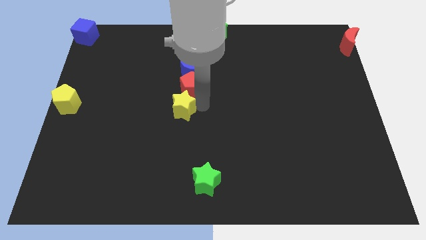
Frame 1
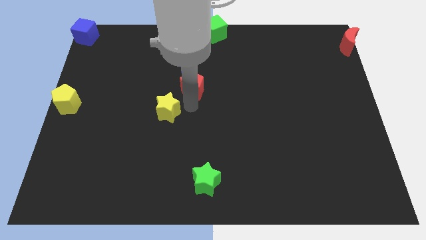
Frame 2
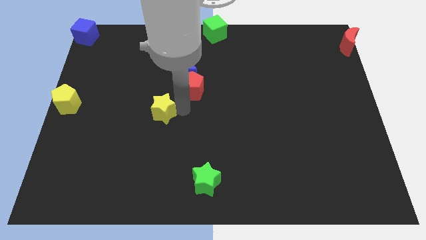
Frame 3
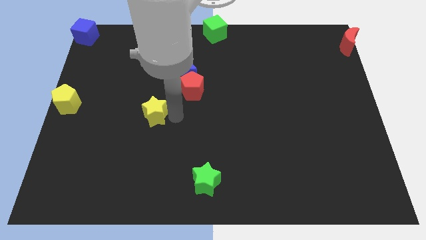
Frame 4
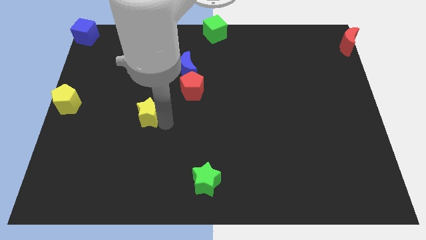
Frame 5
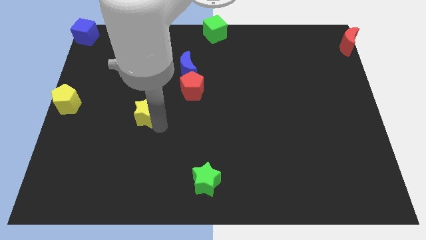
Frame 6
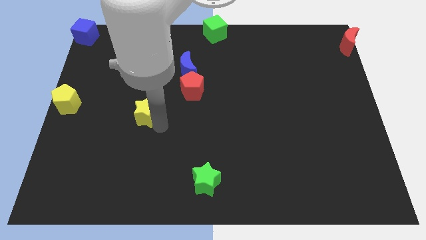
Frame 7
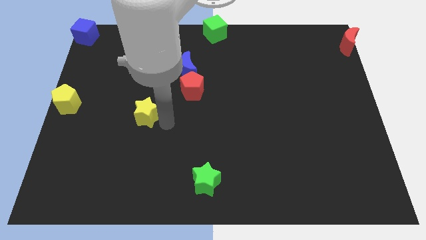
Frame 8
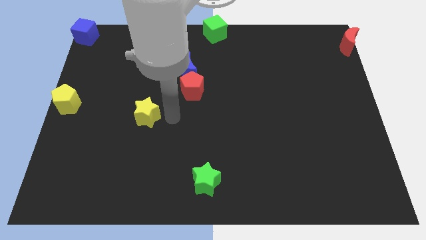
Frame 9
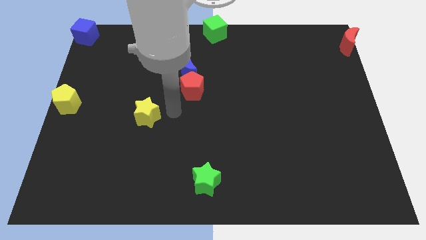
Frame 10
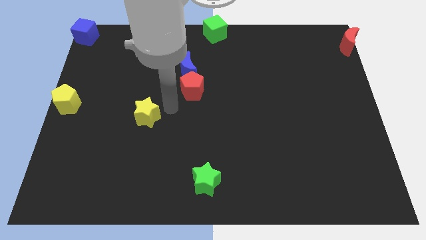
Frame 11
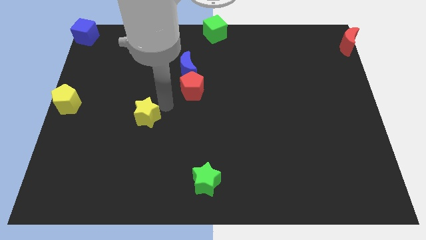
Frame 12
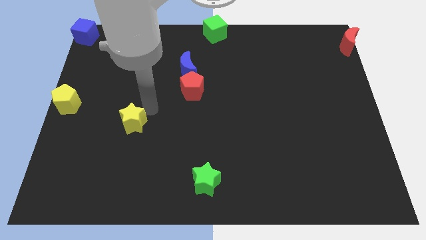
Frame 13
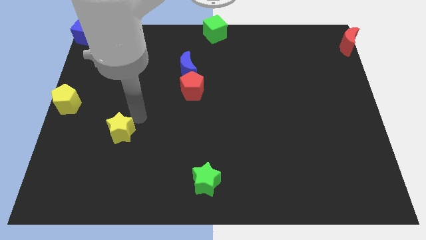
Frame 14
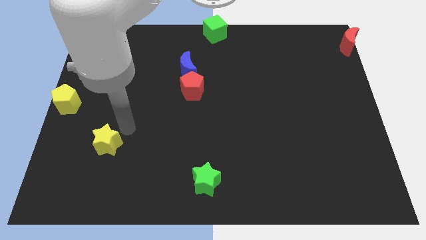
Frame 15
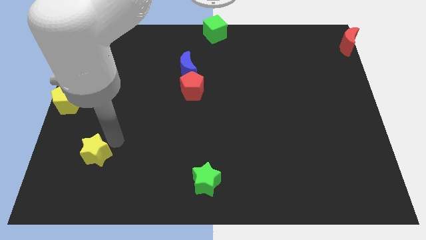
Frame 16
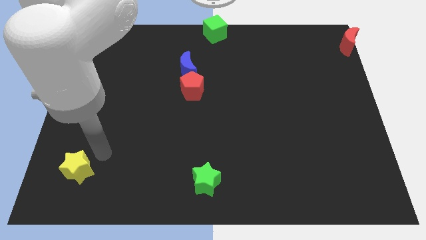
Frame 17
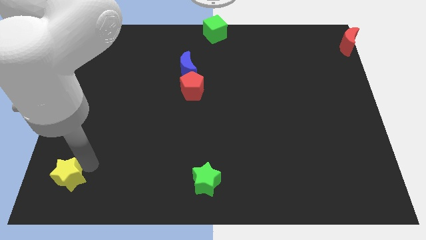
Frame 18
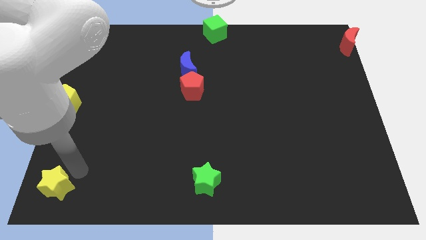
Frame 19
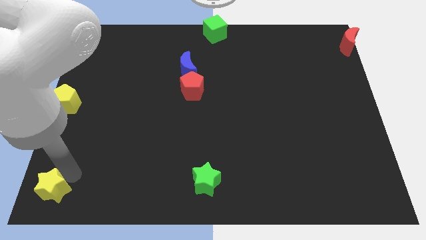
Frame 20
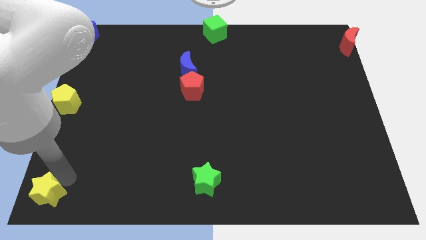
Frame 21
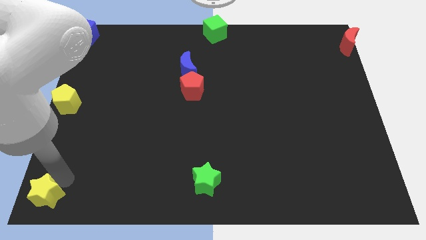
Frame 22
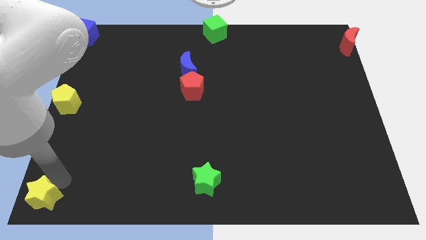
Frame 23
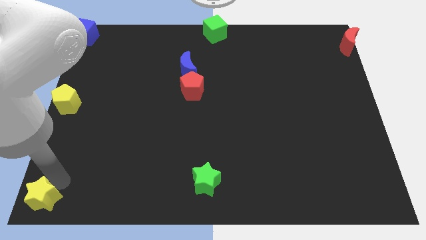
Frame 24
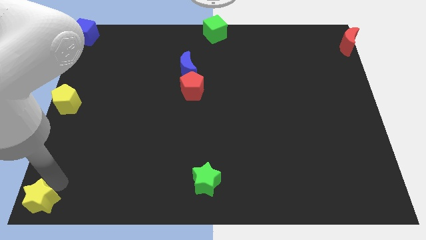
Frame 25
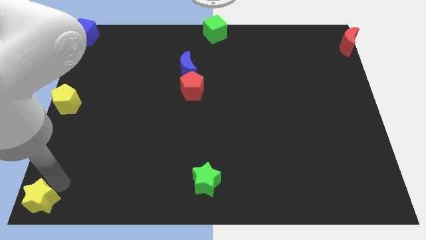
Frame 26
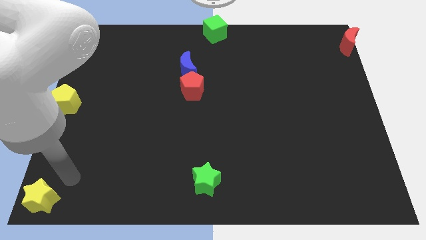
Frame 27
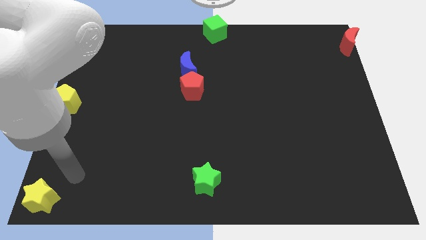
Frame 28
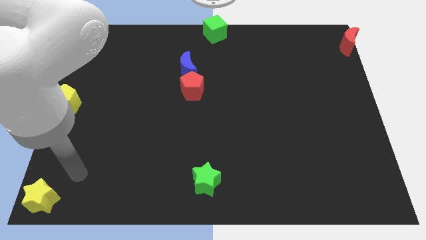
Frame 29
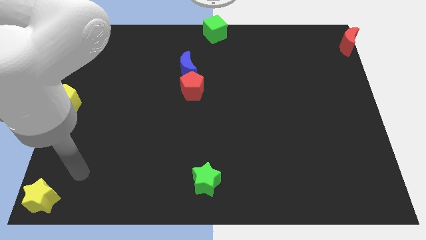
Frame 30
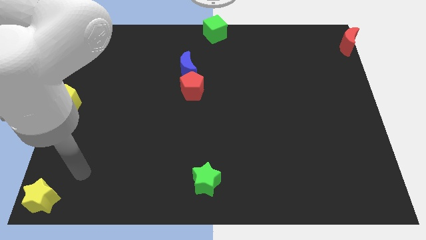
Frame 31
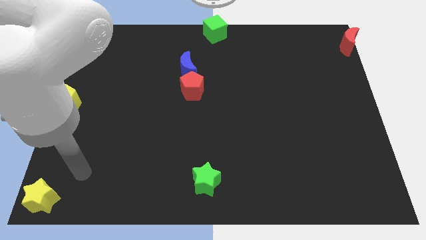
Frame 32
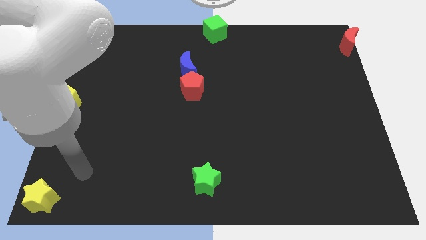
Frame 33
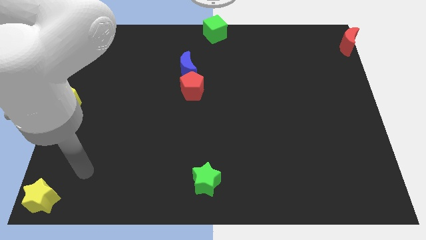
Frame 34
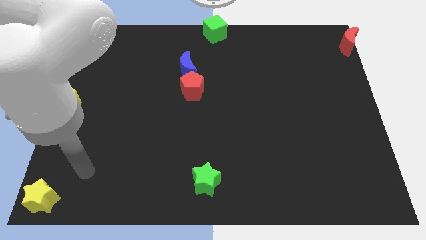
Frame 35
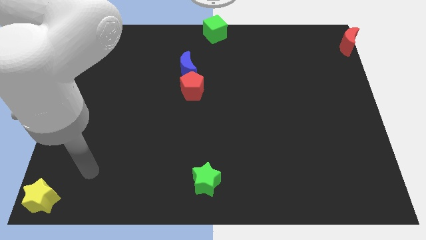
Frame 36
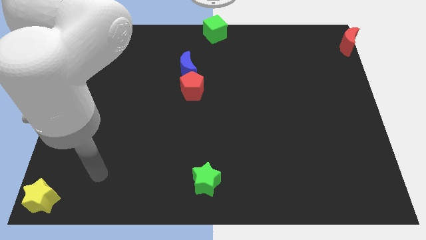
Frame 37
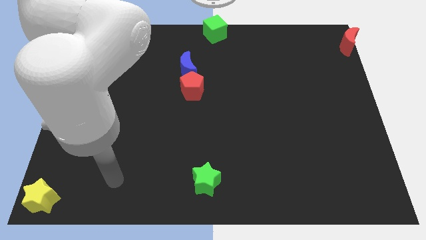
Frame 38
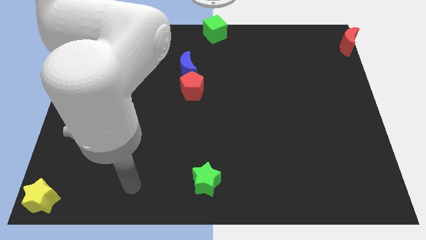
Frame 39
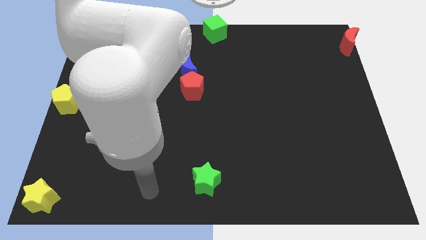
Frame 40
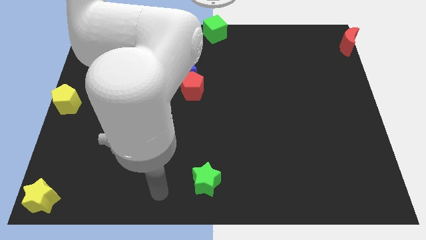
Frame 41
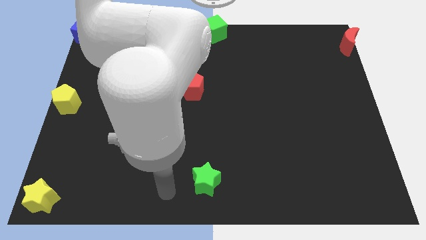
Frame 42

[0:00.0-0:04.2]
place the yellow star at the bottom left corner of the board

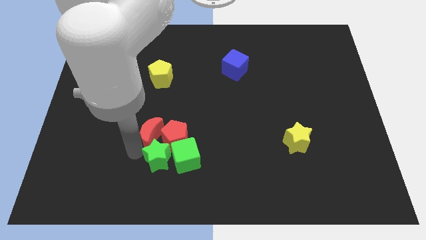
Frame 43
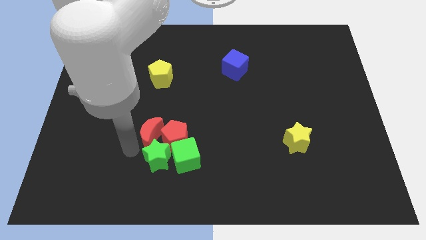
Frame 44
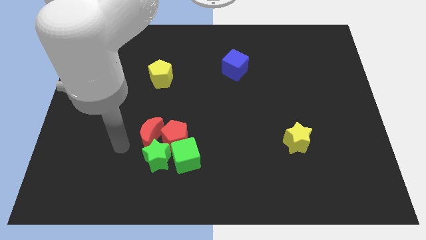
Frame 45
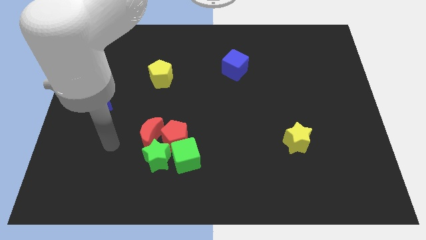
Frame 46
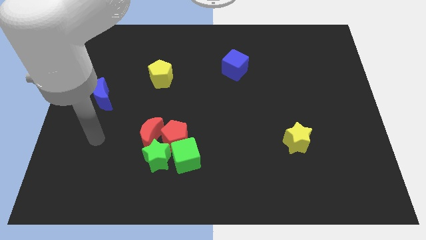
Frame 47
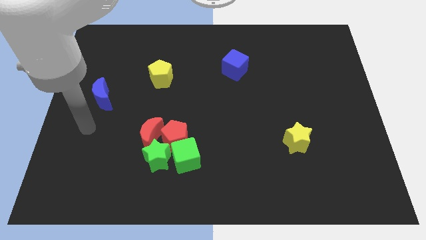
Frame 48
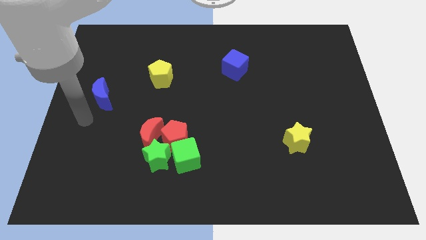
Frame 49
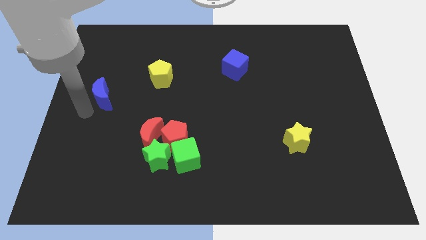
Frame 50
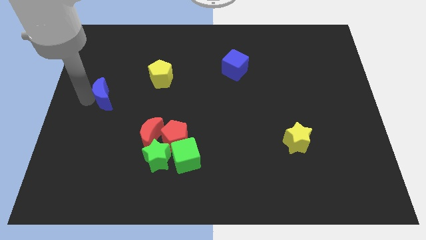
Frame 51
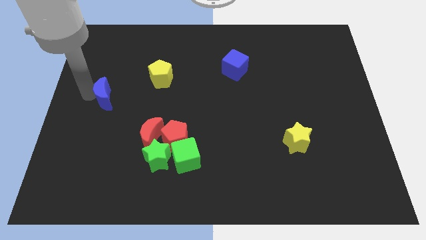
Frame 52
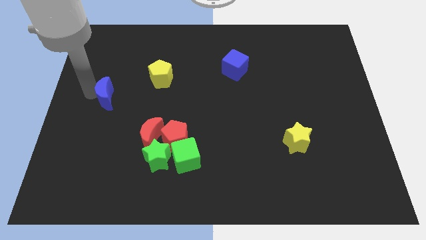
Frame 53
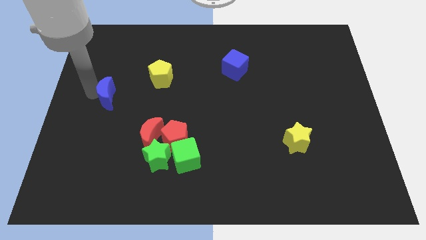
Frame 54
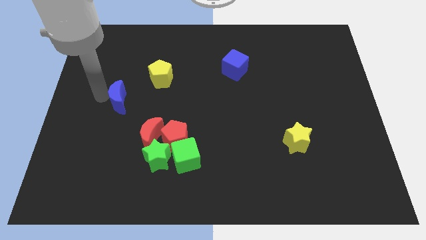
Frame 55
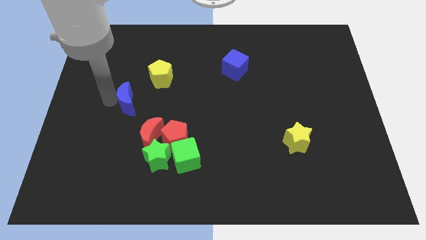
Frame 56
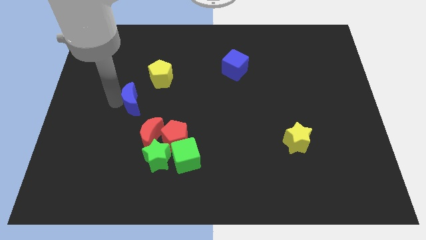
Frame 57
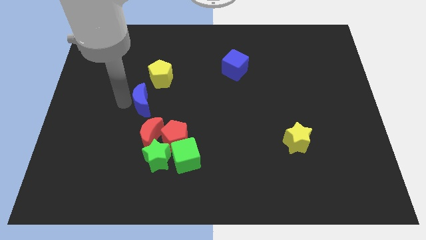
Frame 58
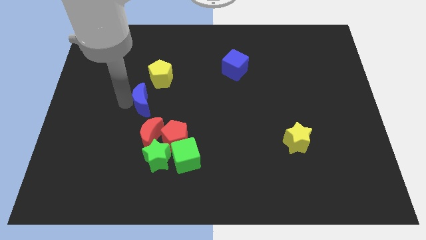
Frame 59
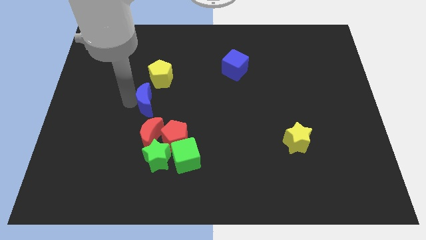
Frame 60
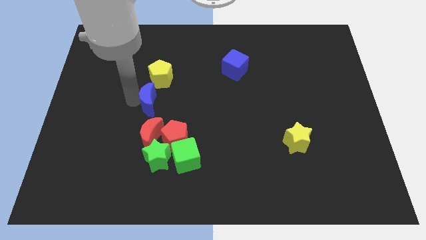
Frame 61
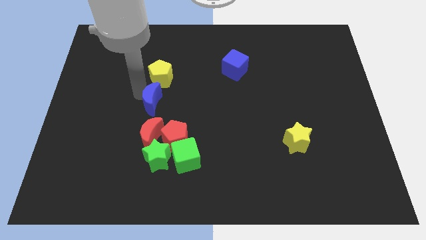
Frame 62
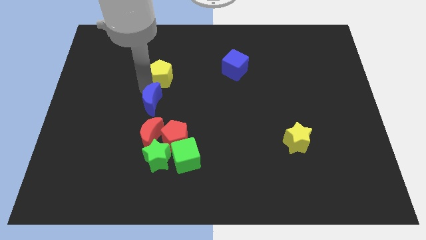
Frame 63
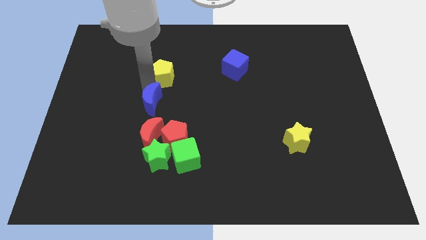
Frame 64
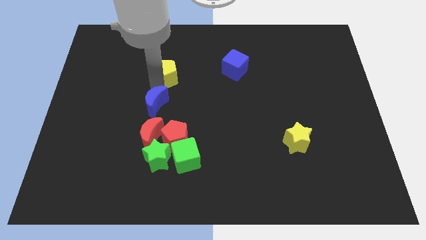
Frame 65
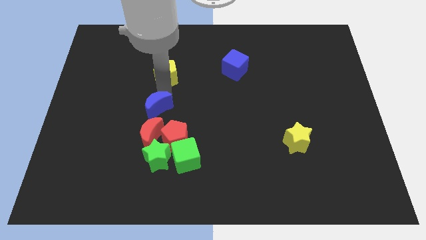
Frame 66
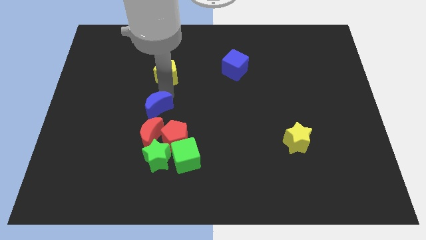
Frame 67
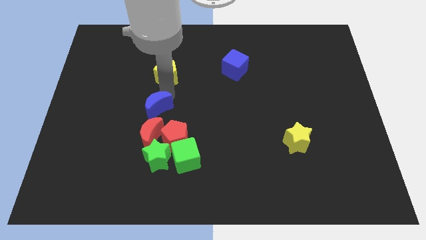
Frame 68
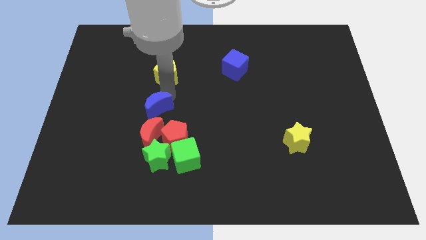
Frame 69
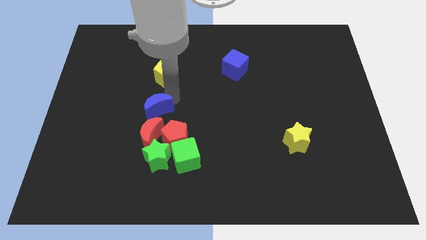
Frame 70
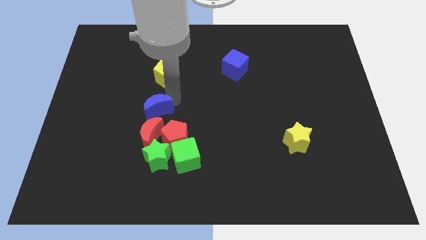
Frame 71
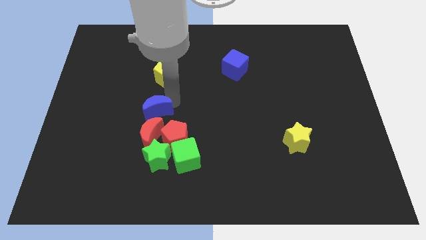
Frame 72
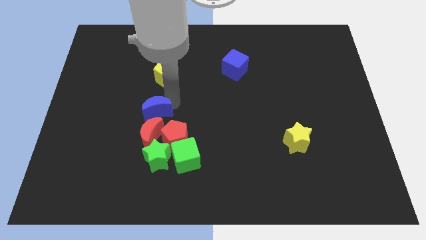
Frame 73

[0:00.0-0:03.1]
move the blue crescent above the red crescent

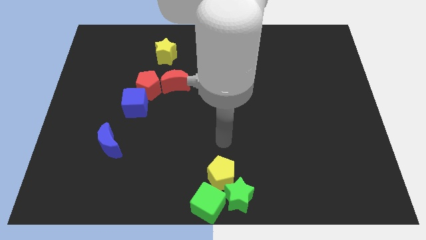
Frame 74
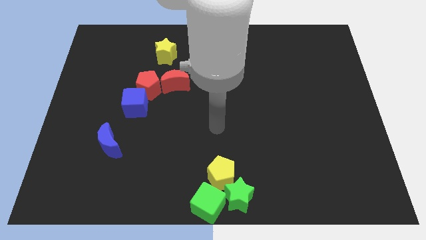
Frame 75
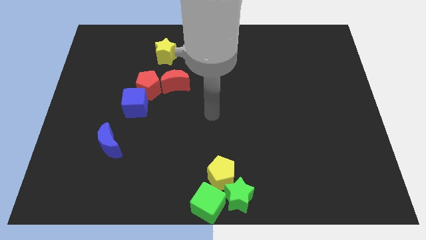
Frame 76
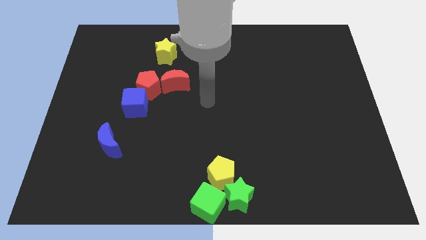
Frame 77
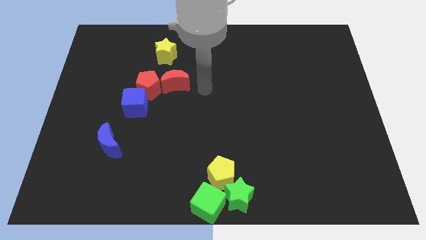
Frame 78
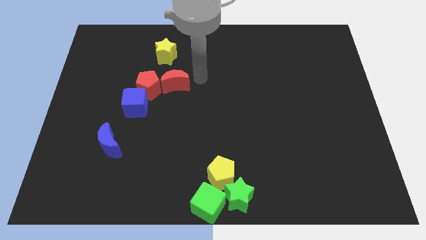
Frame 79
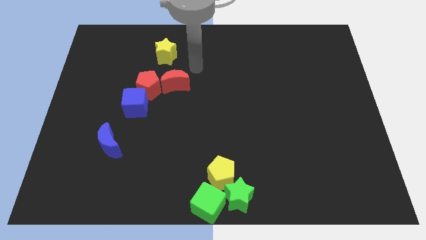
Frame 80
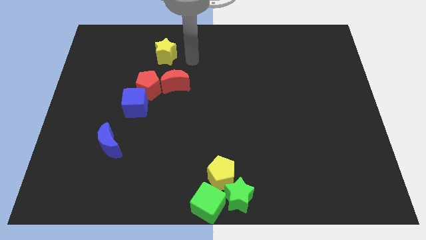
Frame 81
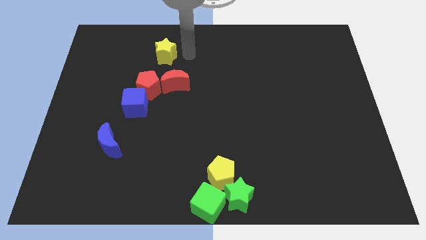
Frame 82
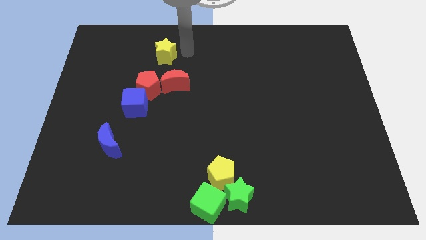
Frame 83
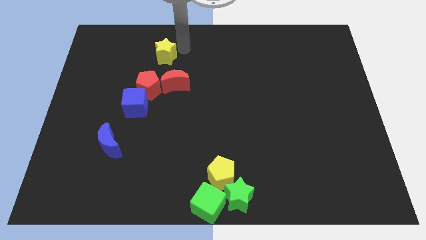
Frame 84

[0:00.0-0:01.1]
go away from the yellow pentagon

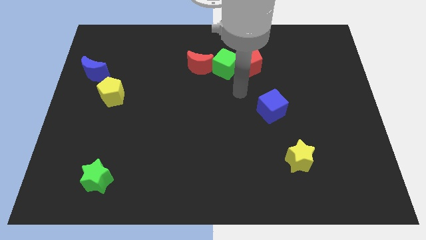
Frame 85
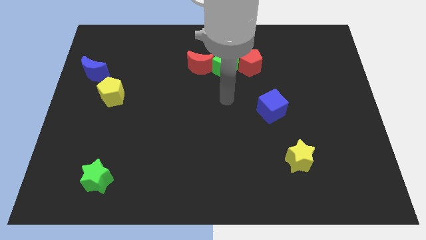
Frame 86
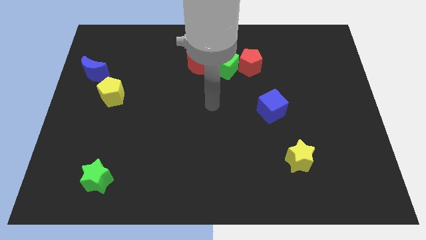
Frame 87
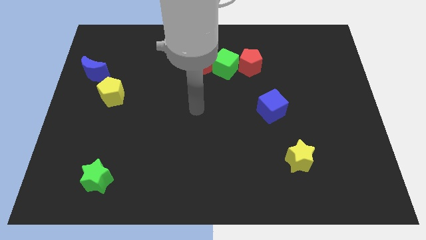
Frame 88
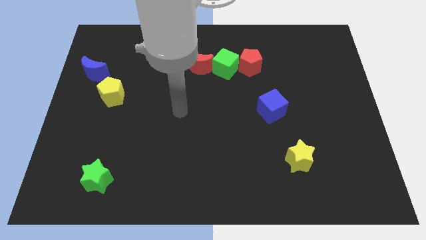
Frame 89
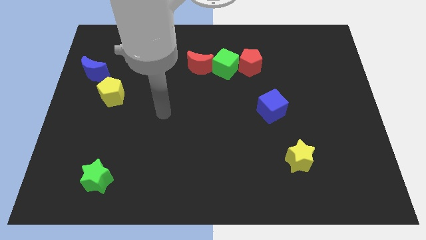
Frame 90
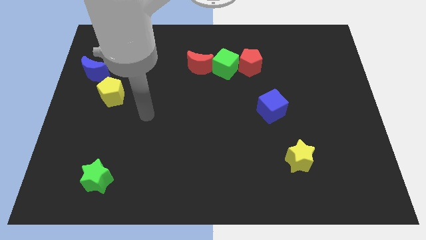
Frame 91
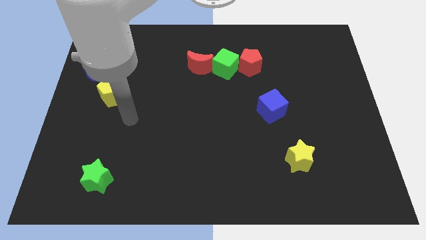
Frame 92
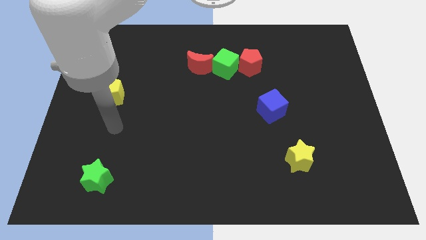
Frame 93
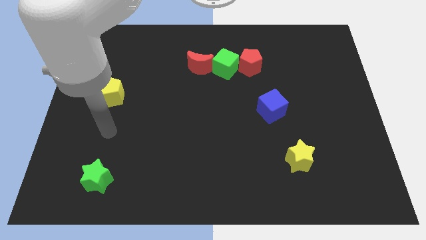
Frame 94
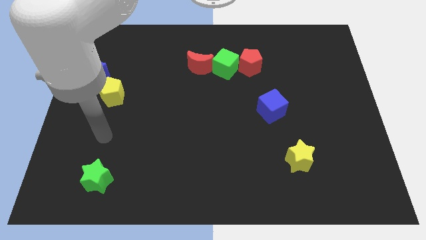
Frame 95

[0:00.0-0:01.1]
put your hand in between the yellow pentagon and the green star
